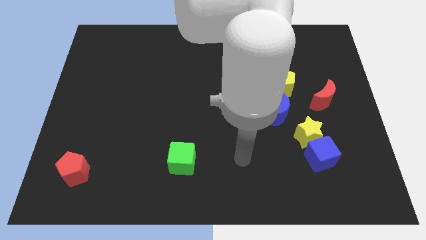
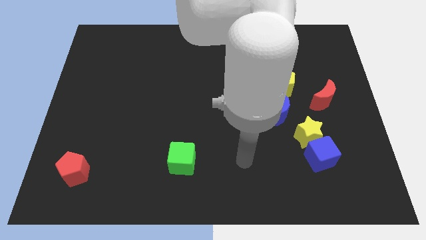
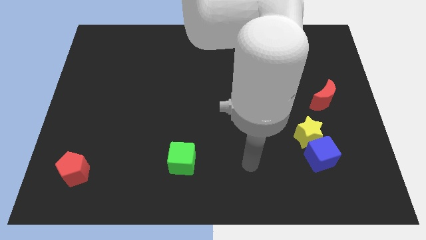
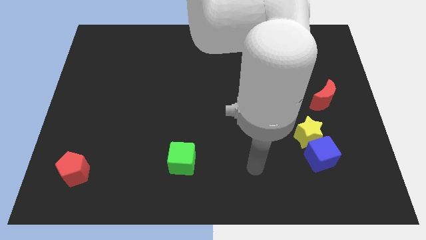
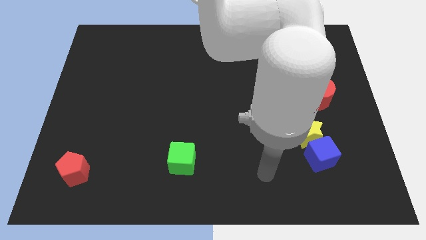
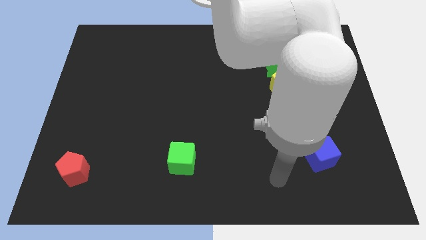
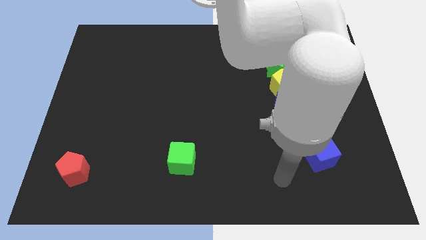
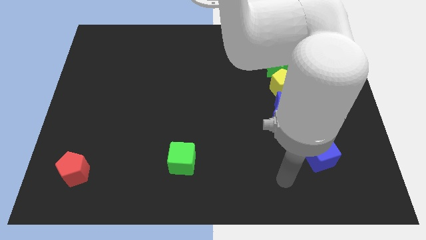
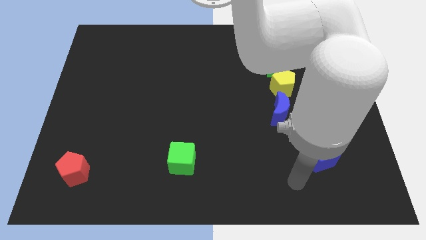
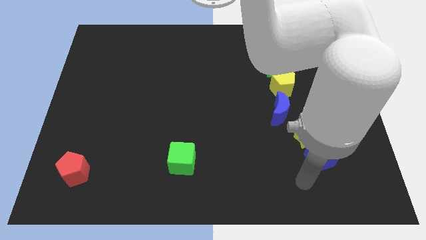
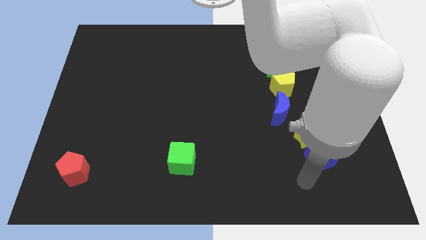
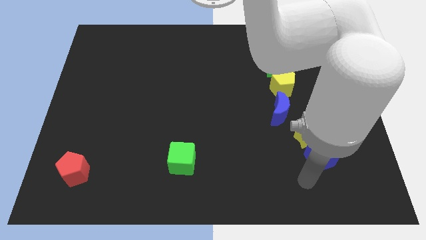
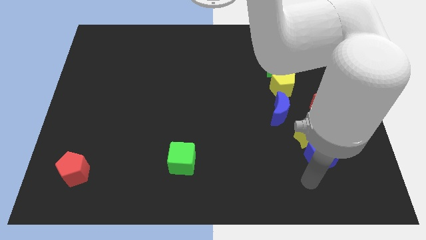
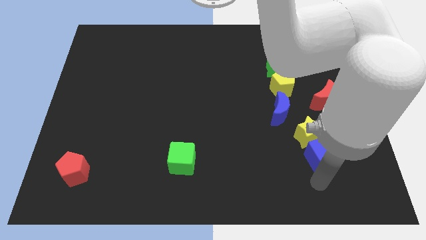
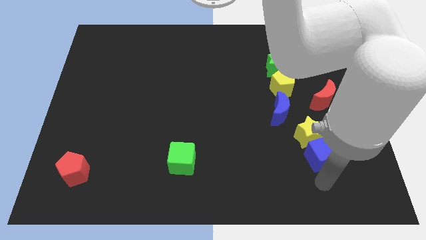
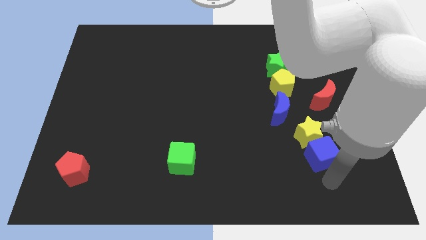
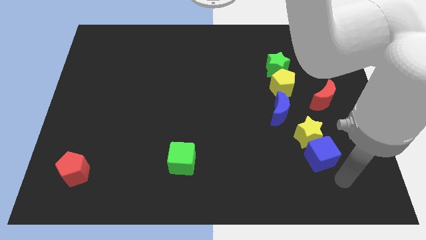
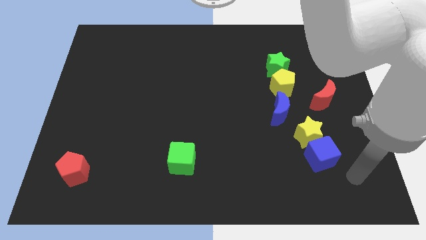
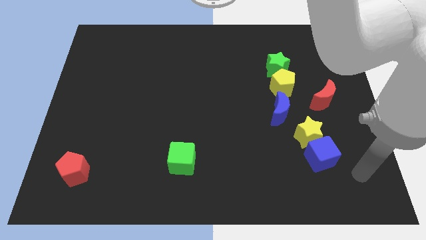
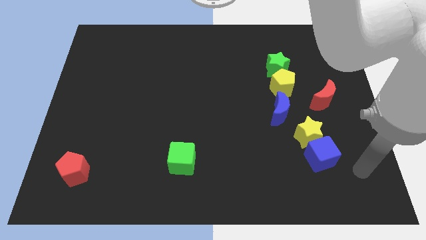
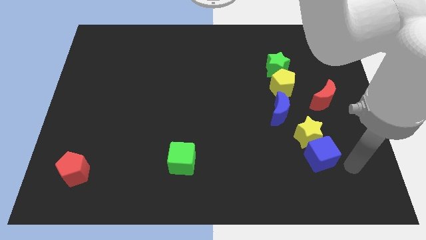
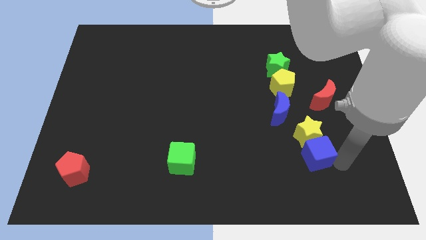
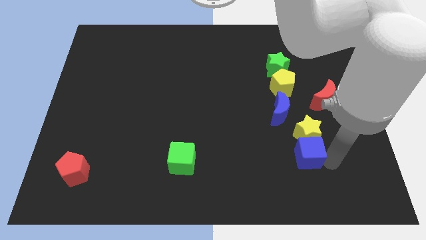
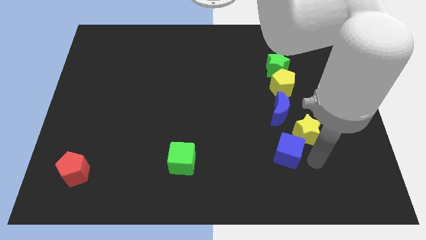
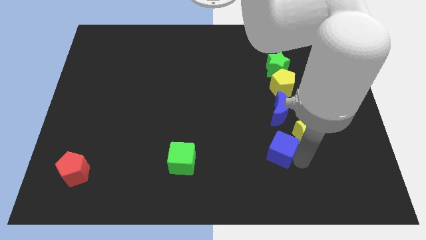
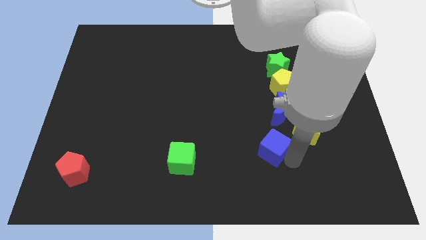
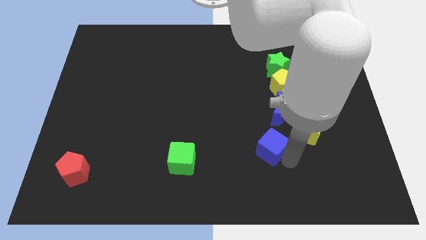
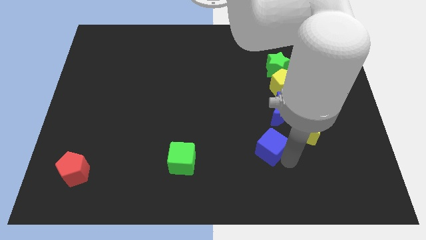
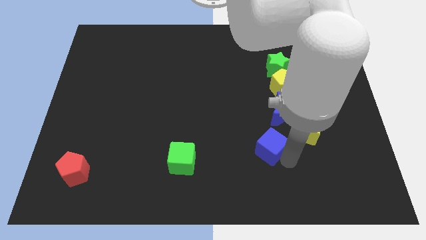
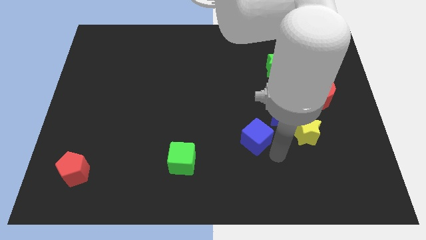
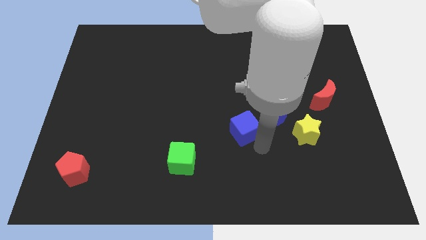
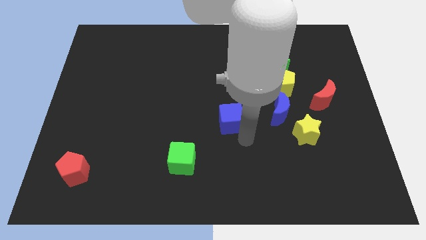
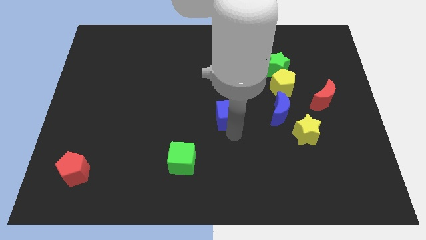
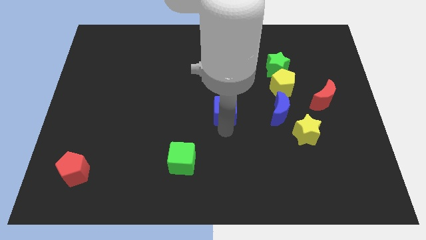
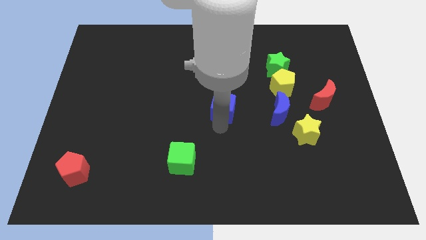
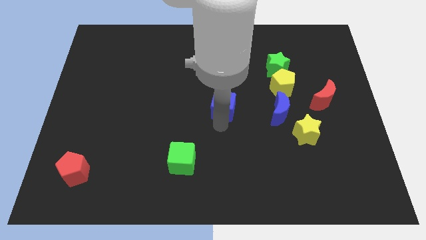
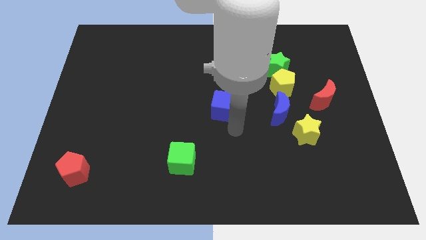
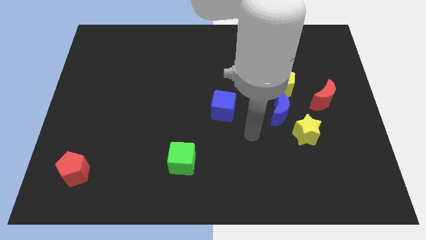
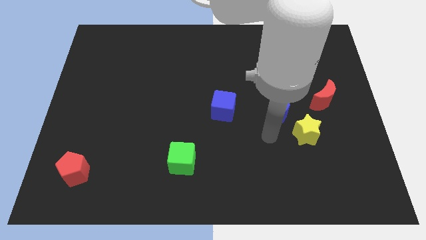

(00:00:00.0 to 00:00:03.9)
separate the blue cube from the yellow star

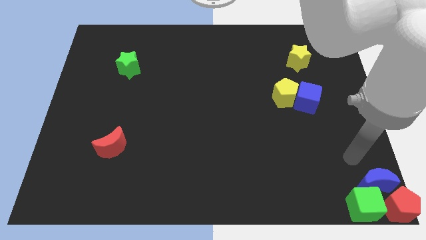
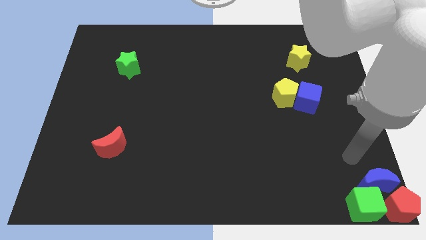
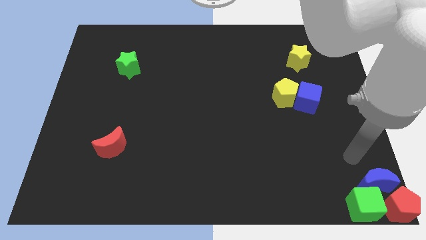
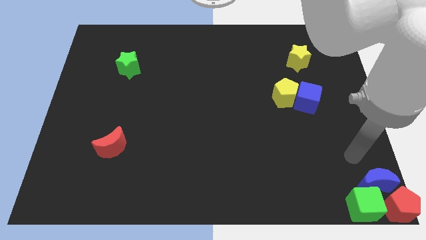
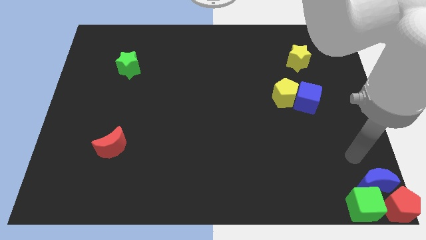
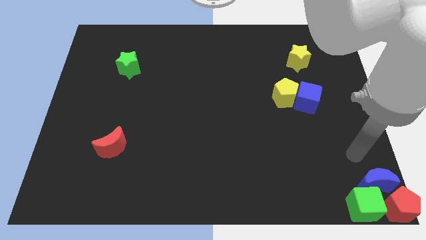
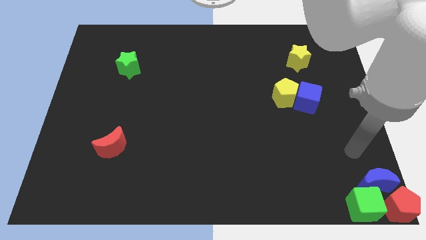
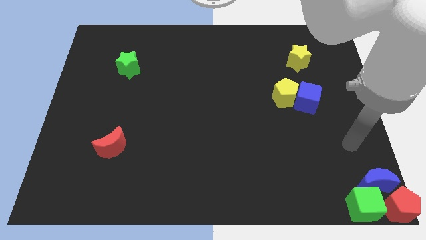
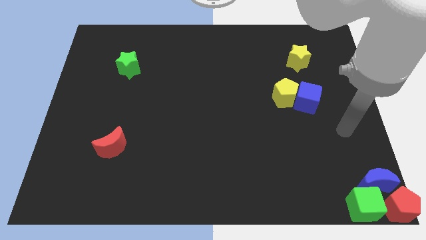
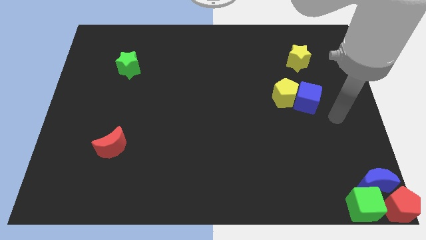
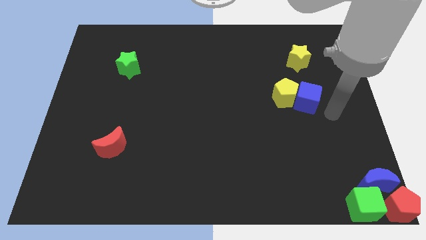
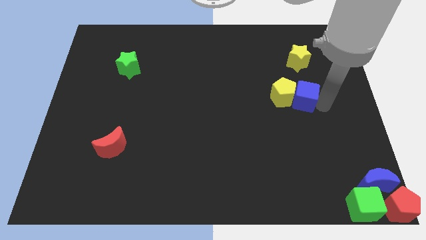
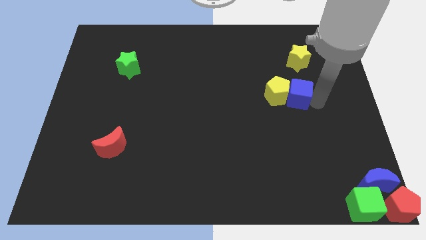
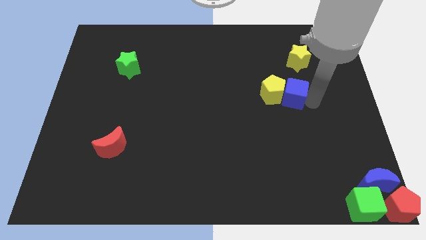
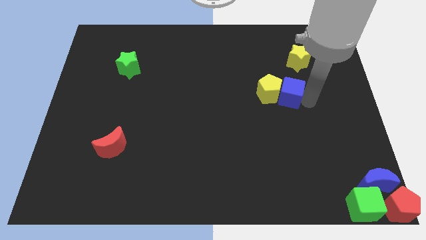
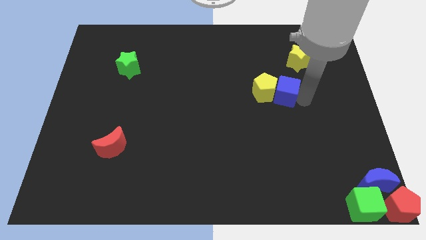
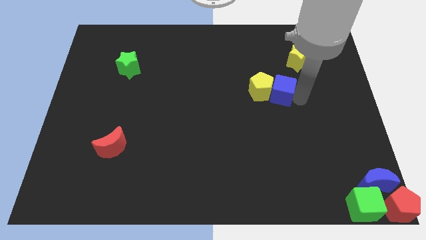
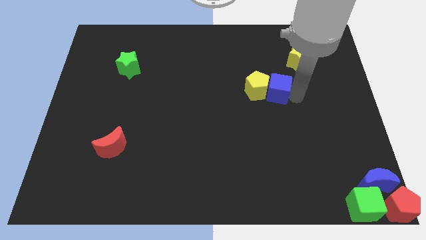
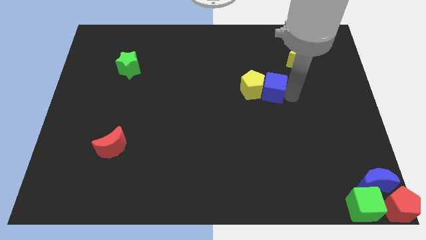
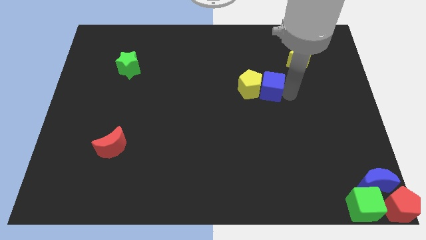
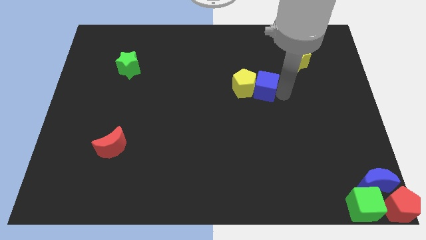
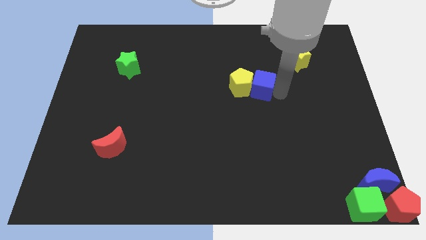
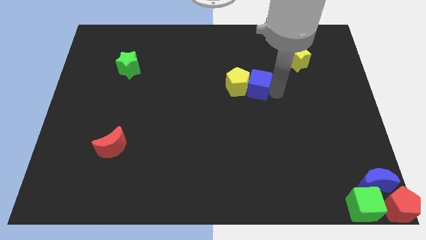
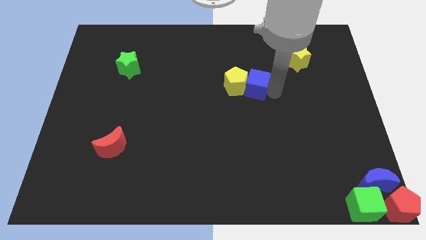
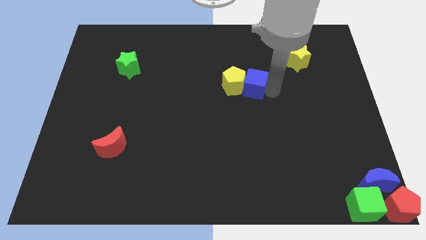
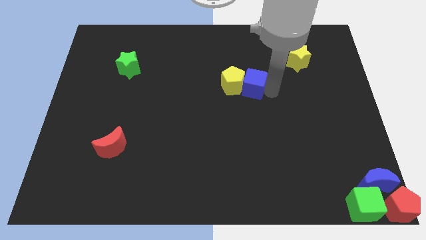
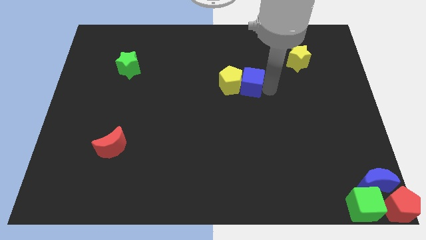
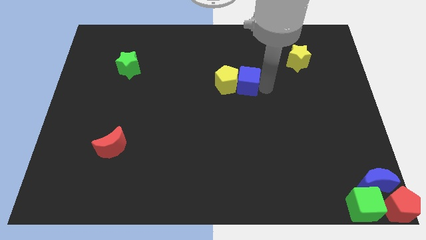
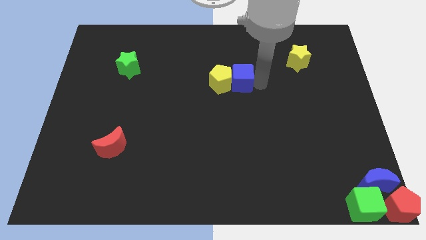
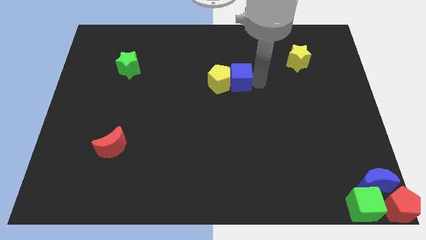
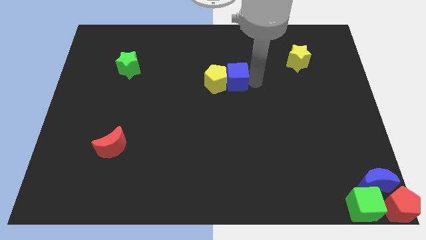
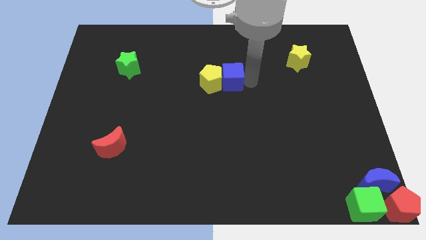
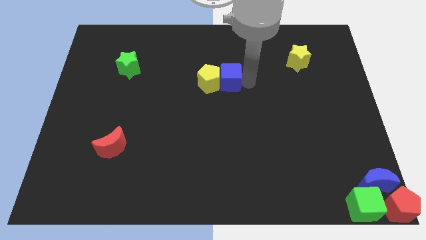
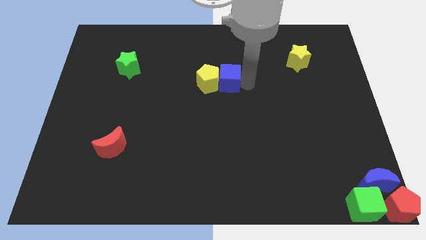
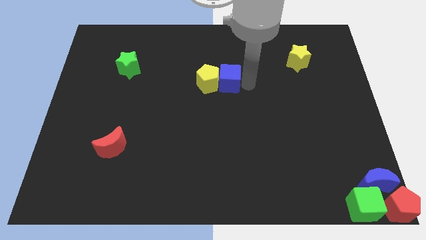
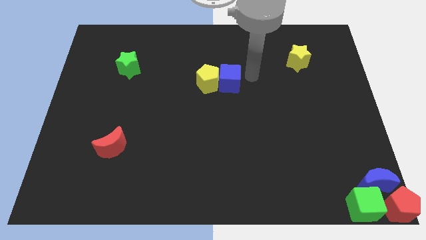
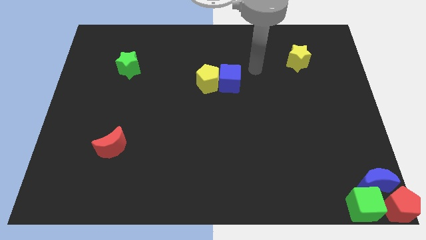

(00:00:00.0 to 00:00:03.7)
push blue cube into yellow pentagon

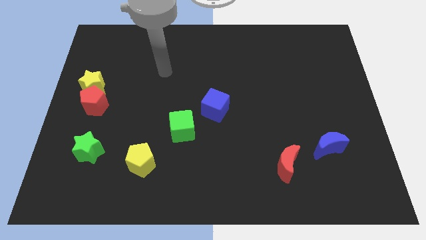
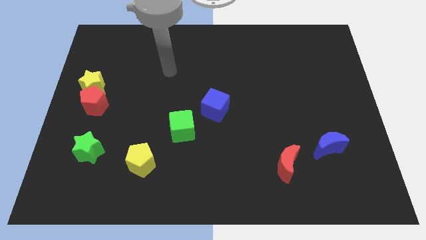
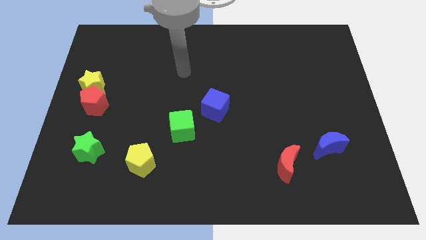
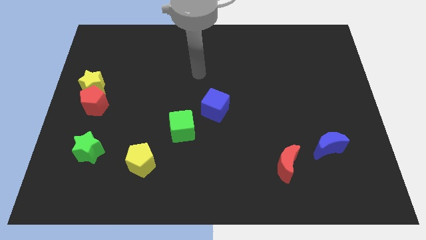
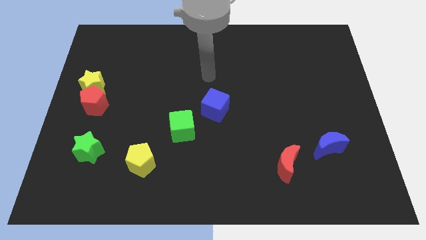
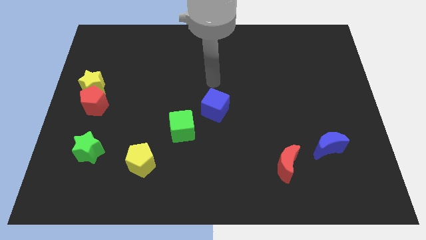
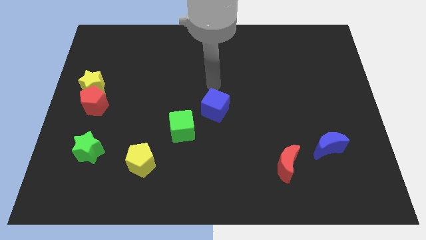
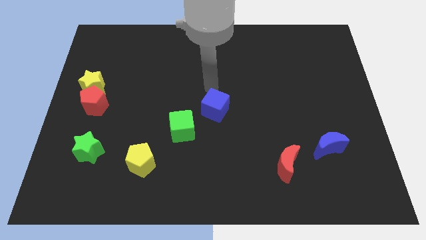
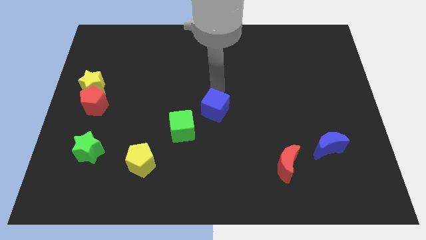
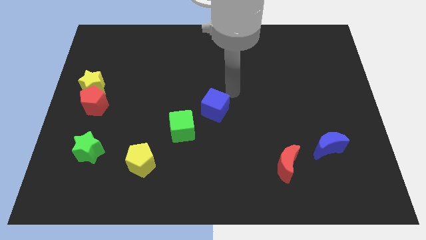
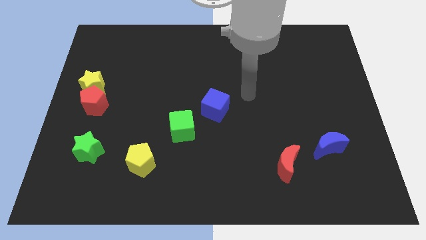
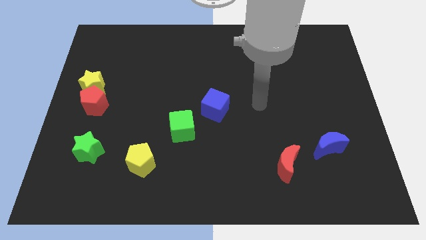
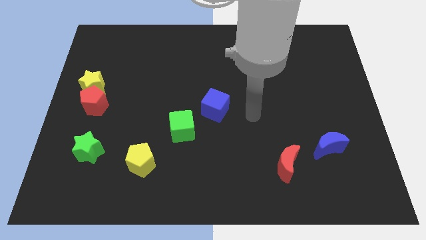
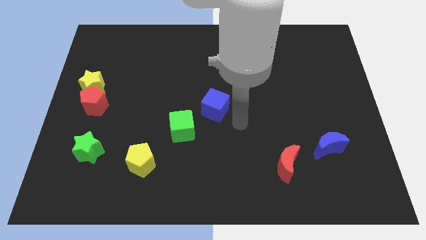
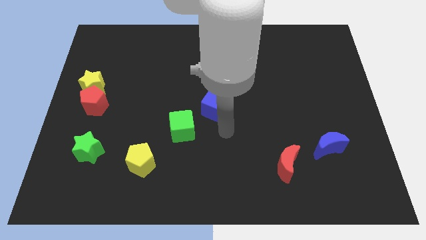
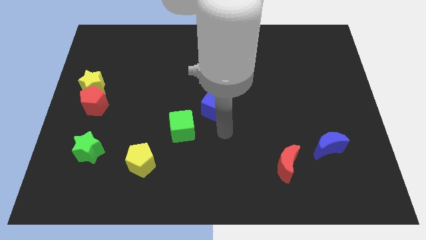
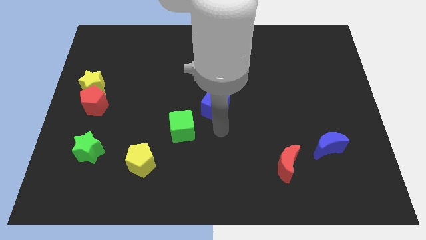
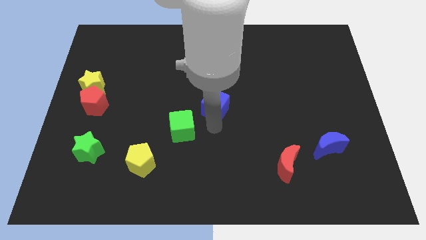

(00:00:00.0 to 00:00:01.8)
point your arm below blue cube
